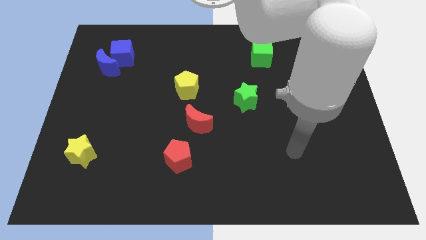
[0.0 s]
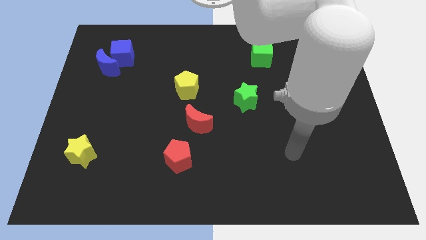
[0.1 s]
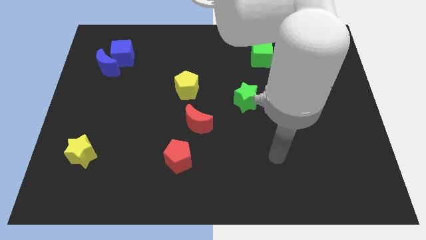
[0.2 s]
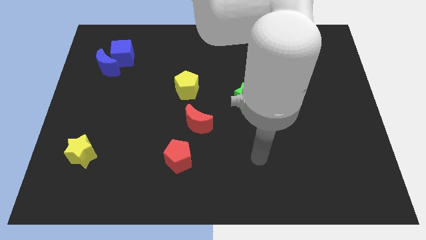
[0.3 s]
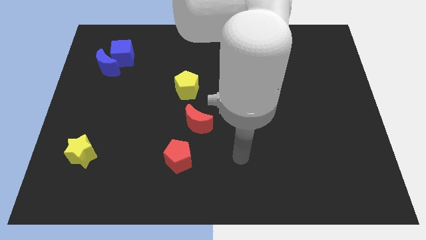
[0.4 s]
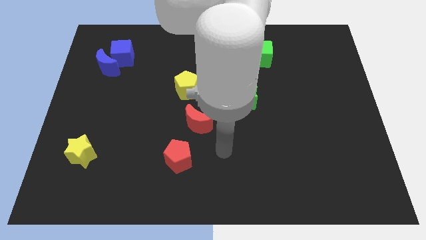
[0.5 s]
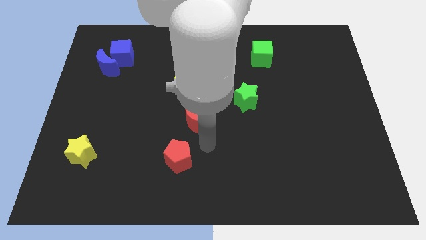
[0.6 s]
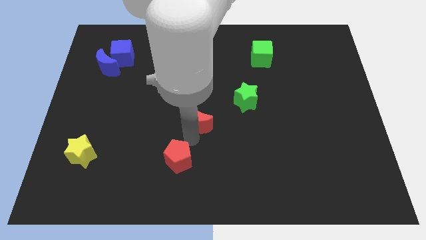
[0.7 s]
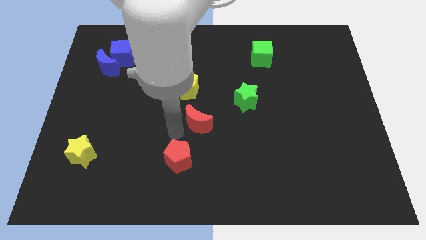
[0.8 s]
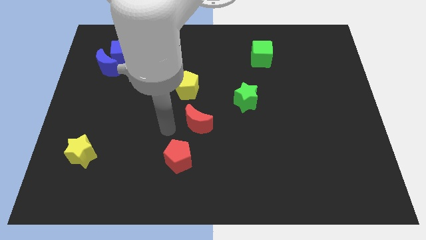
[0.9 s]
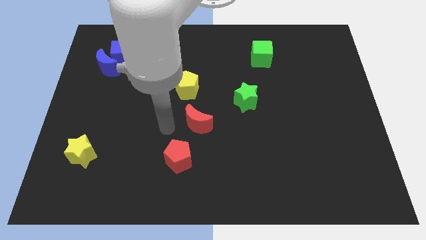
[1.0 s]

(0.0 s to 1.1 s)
move your arm to the center of the board

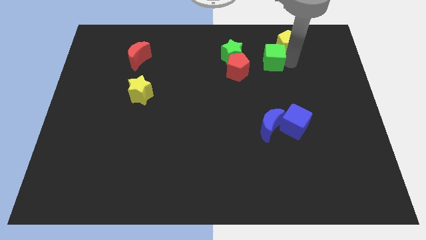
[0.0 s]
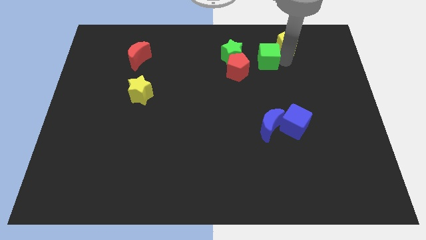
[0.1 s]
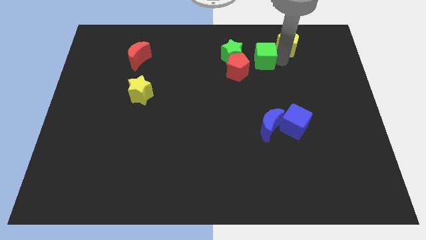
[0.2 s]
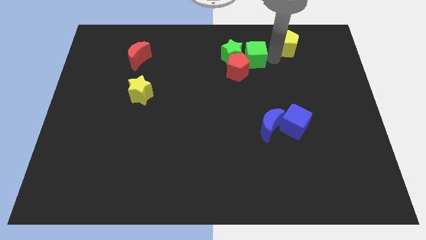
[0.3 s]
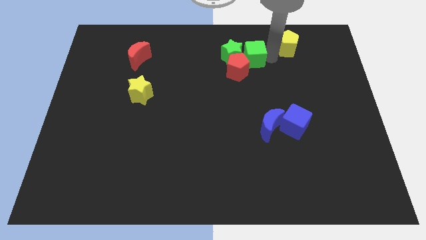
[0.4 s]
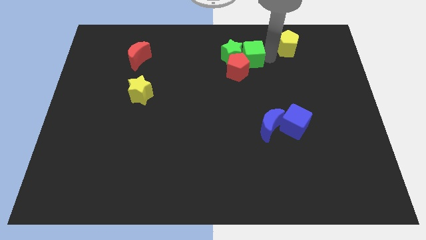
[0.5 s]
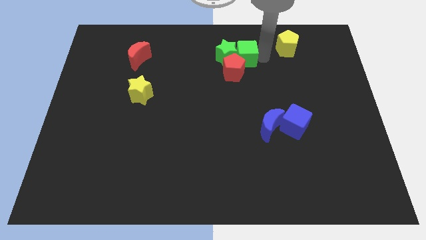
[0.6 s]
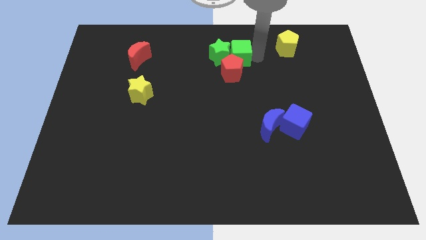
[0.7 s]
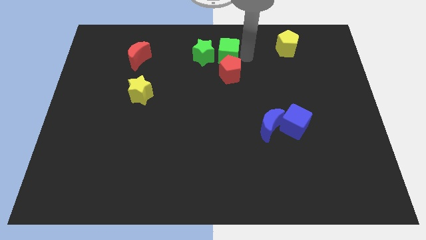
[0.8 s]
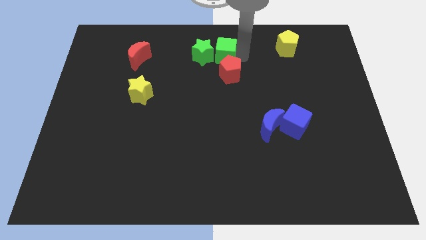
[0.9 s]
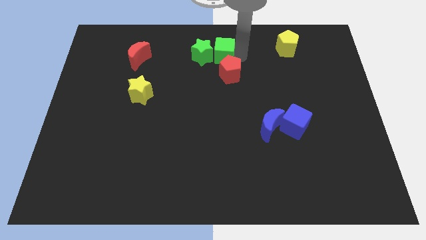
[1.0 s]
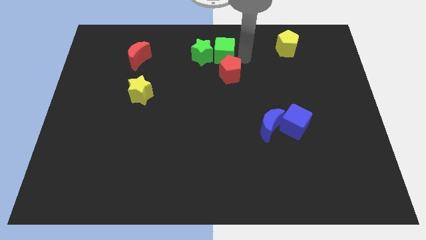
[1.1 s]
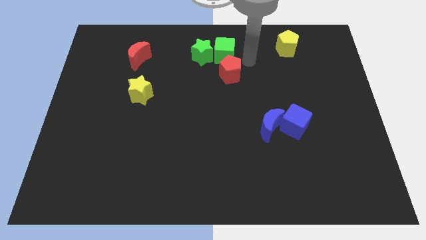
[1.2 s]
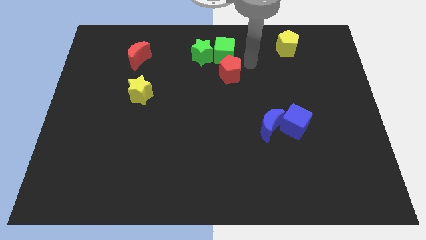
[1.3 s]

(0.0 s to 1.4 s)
push the green cube to the top of the red pentagon

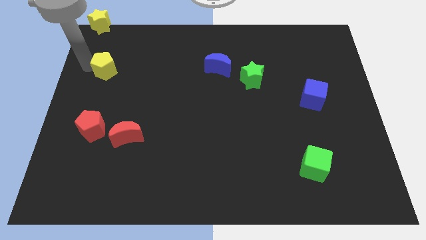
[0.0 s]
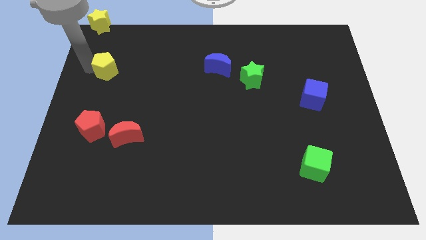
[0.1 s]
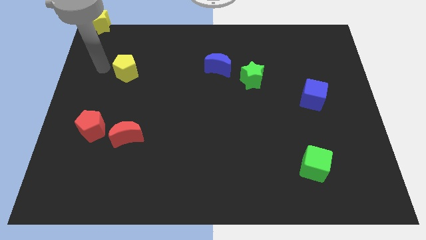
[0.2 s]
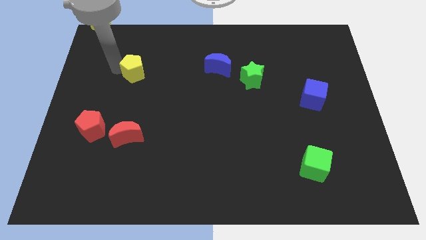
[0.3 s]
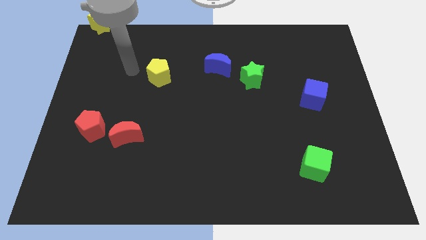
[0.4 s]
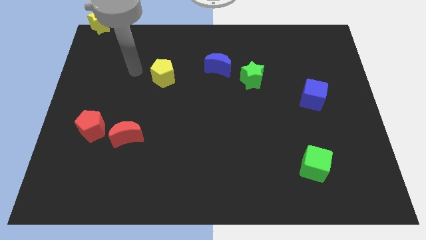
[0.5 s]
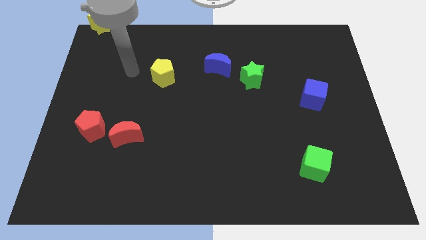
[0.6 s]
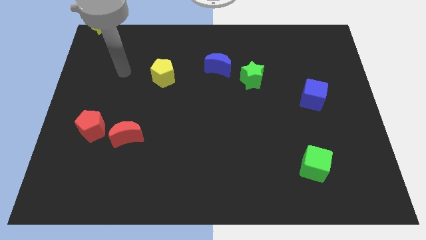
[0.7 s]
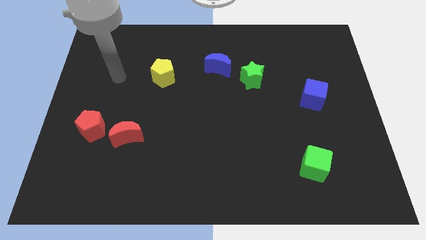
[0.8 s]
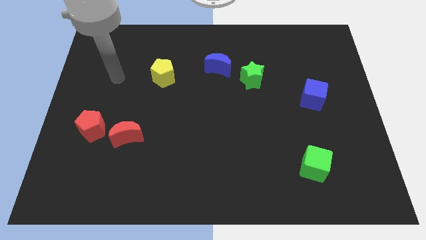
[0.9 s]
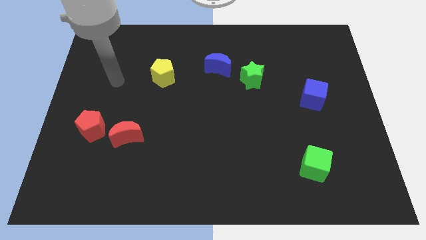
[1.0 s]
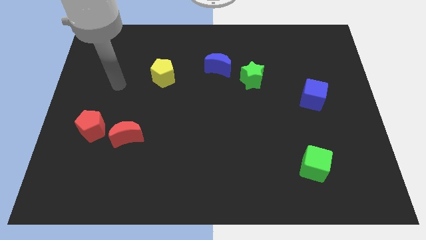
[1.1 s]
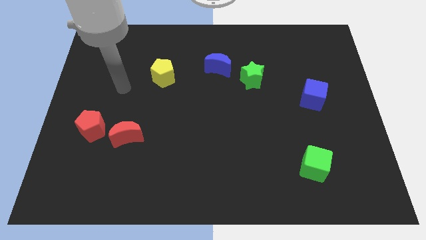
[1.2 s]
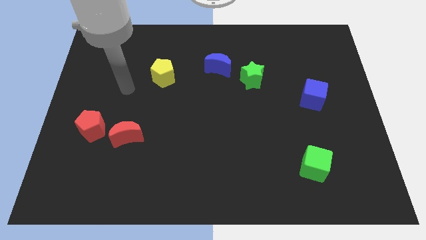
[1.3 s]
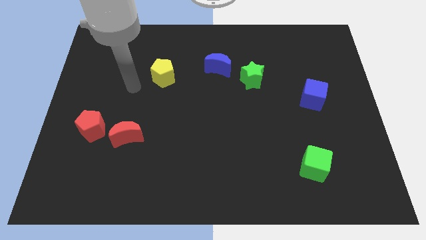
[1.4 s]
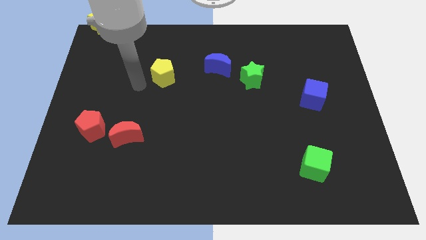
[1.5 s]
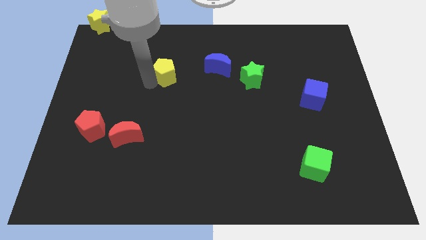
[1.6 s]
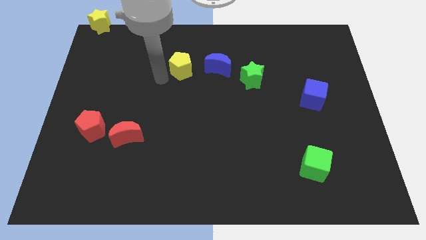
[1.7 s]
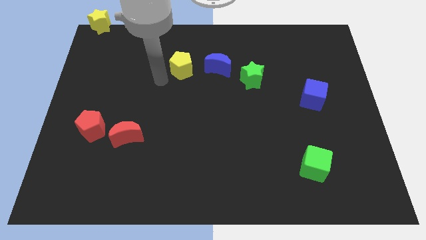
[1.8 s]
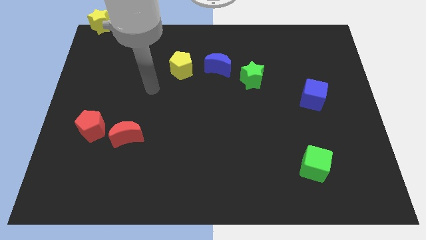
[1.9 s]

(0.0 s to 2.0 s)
place the yellow pentagon to the left side of the blue moon

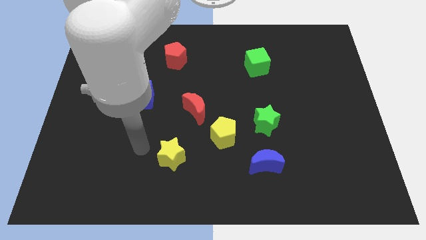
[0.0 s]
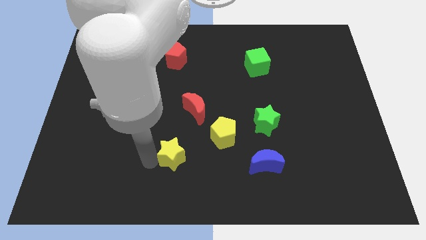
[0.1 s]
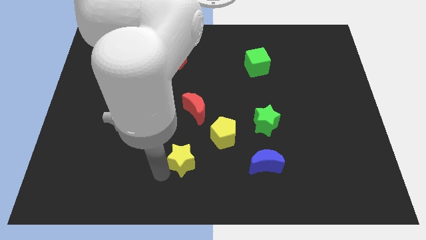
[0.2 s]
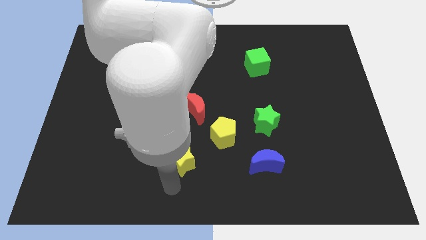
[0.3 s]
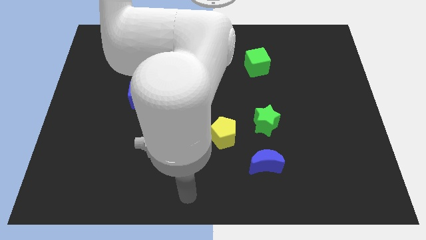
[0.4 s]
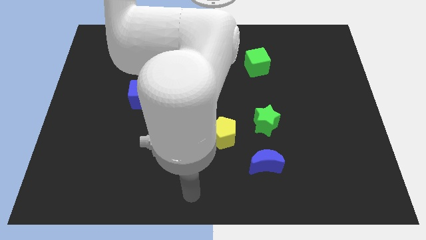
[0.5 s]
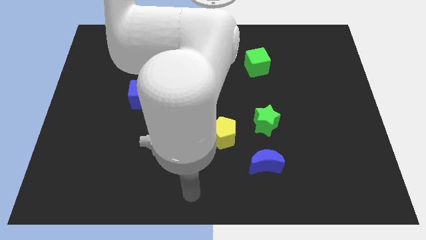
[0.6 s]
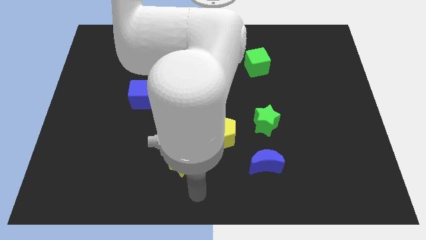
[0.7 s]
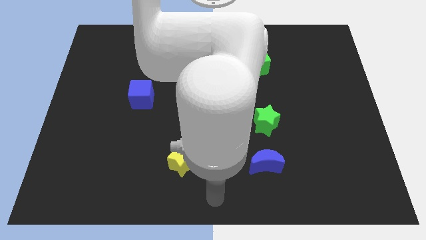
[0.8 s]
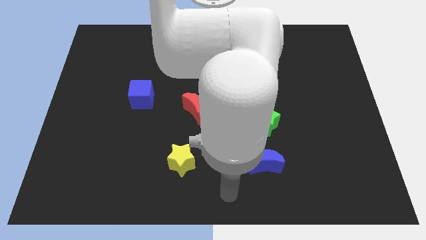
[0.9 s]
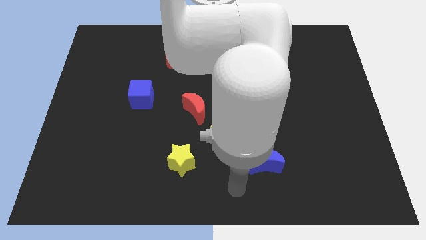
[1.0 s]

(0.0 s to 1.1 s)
tap the yellow star

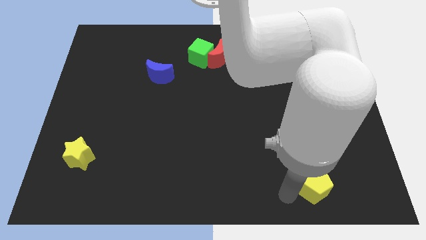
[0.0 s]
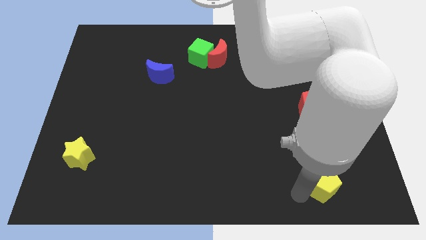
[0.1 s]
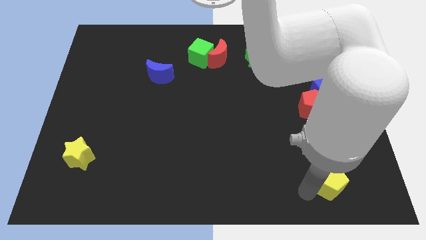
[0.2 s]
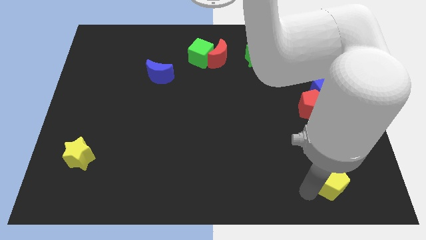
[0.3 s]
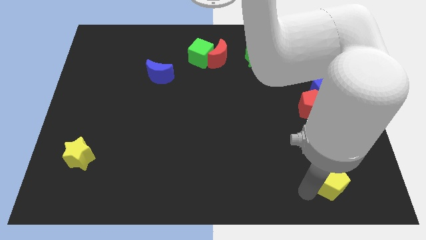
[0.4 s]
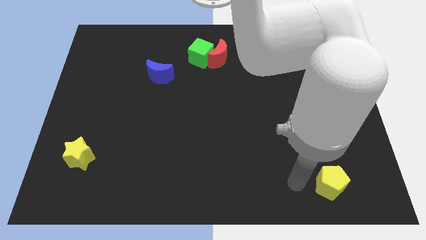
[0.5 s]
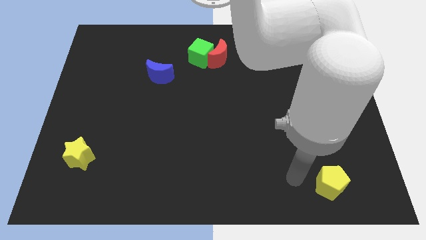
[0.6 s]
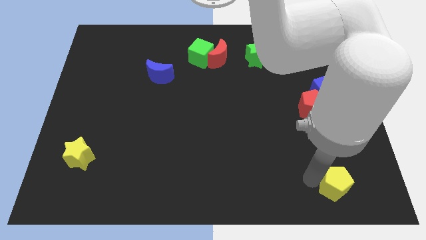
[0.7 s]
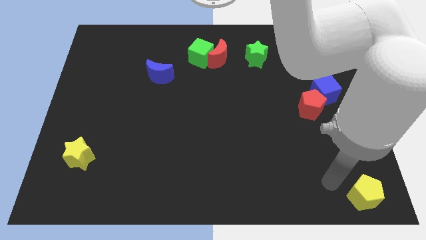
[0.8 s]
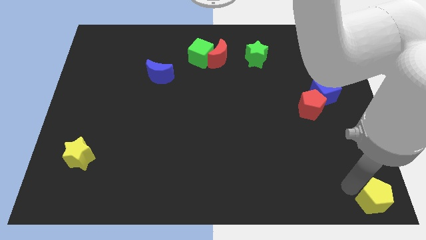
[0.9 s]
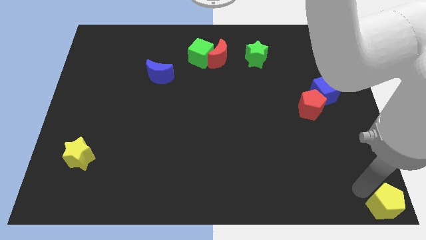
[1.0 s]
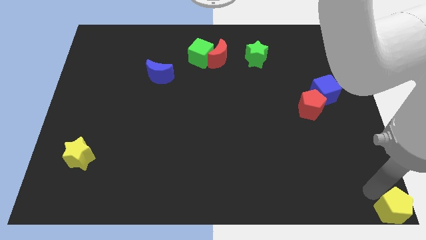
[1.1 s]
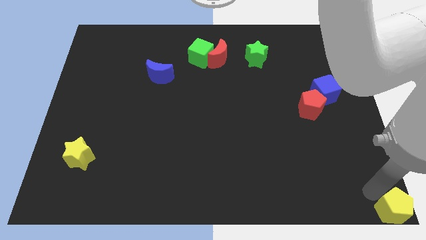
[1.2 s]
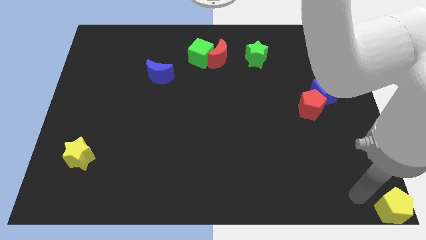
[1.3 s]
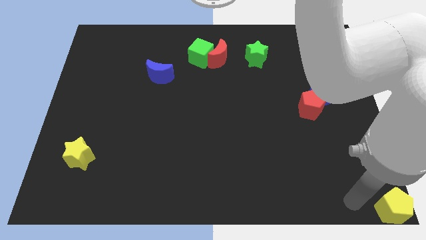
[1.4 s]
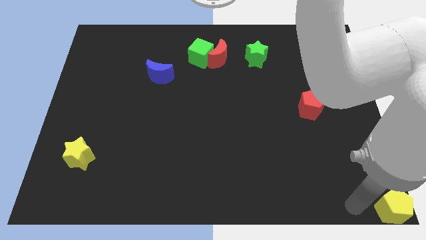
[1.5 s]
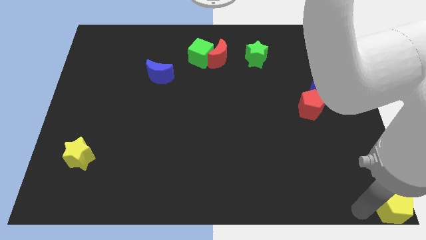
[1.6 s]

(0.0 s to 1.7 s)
push the yellow pentagon to the bottom right corner

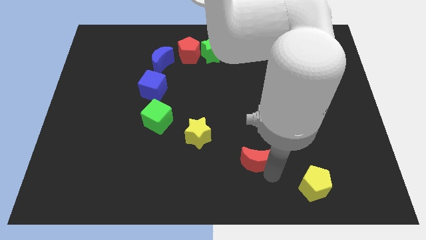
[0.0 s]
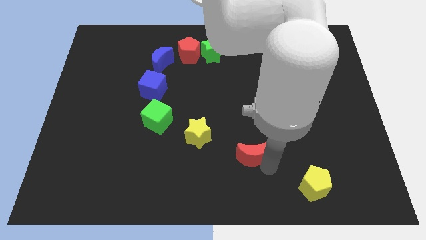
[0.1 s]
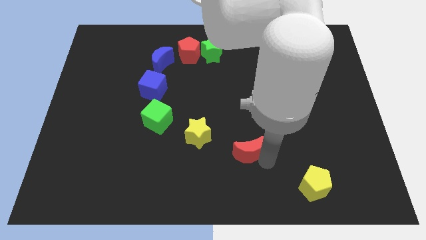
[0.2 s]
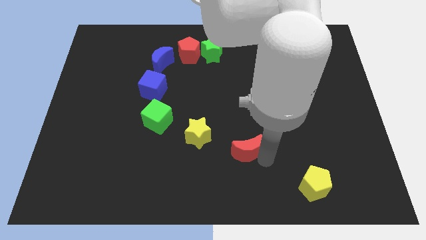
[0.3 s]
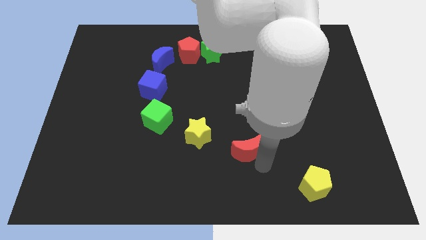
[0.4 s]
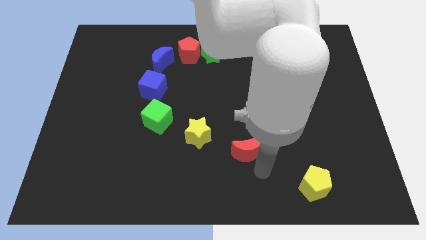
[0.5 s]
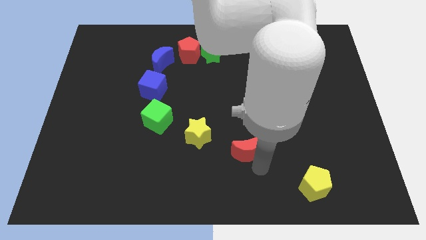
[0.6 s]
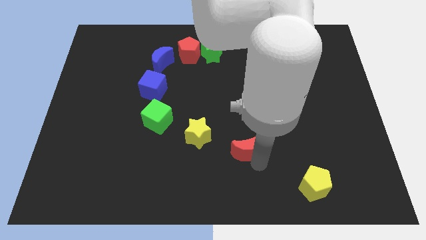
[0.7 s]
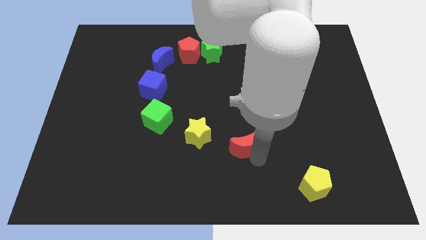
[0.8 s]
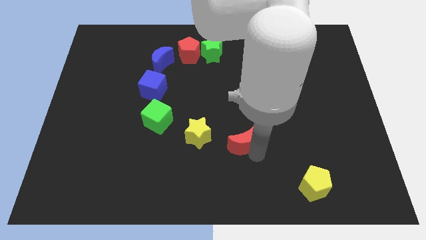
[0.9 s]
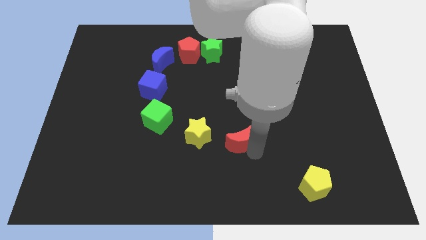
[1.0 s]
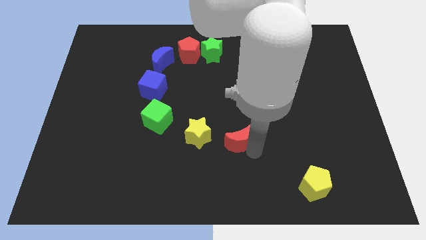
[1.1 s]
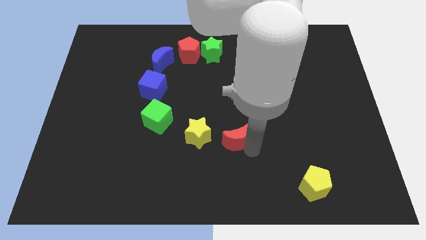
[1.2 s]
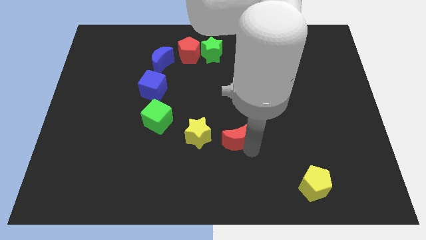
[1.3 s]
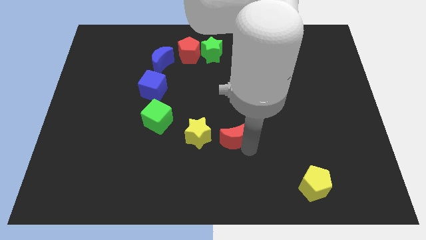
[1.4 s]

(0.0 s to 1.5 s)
put the red moon to the right side of yellow star

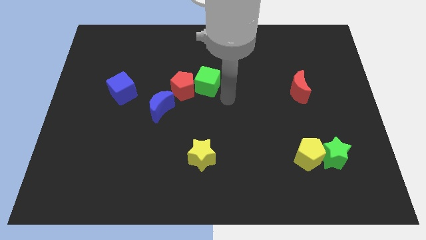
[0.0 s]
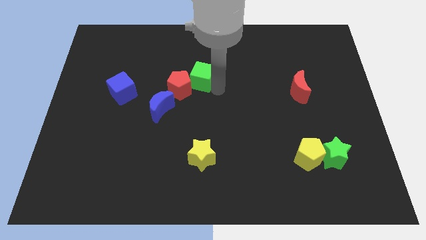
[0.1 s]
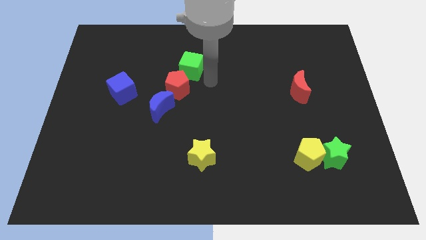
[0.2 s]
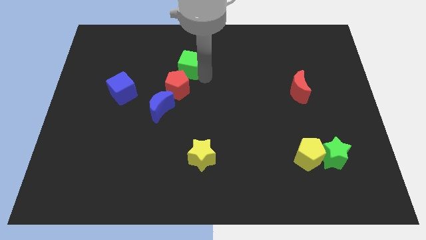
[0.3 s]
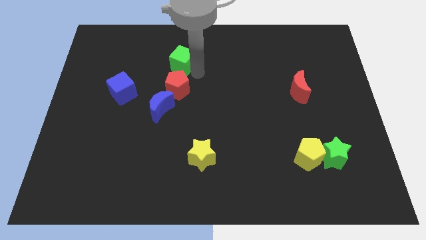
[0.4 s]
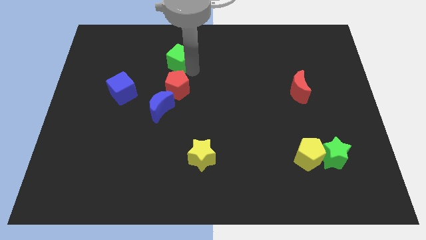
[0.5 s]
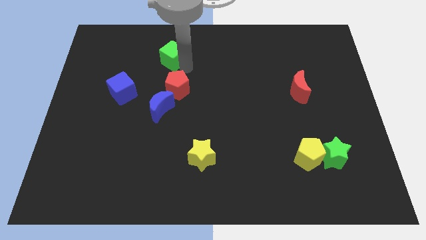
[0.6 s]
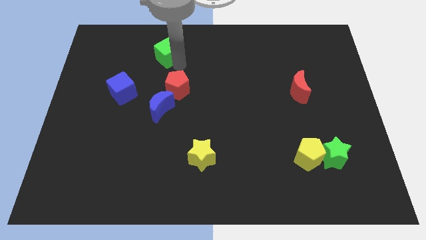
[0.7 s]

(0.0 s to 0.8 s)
separate the green cube from the red pentagon
